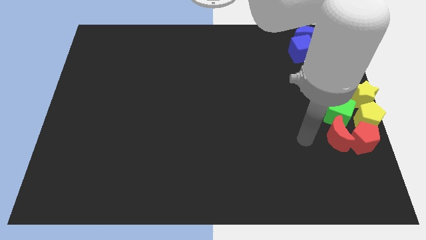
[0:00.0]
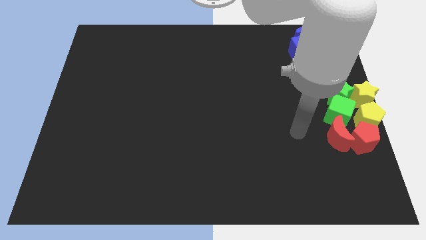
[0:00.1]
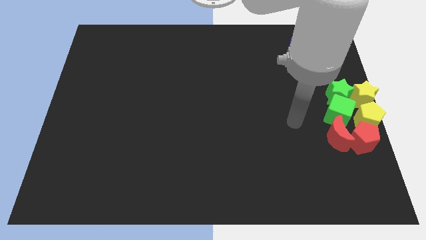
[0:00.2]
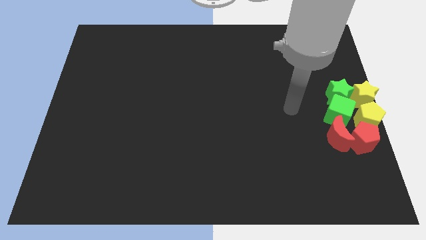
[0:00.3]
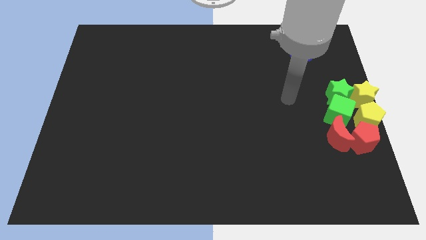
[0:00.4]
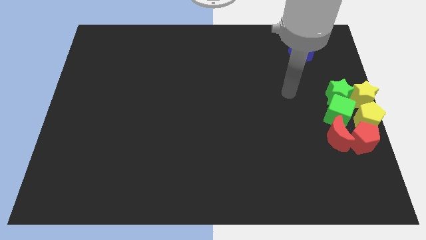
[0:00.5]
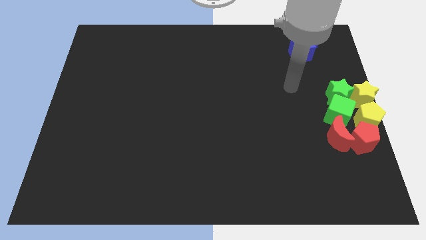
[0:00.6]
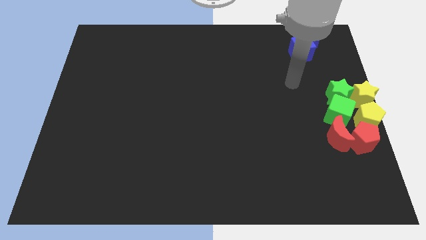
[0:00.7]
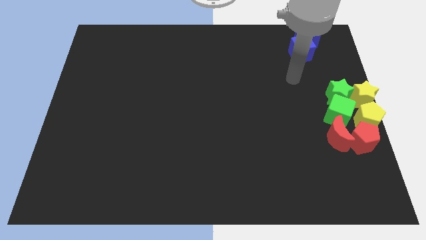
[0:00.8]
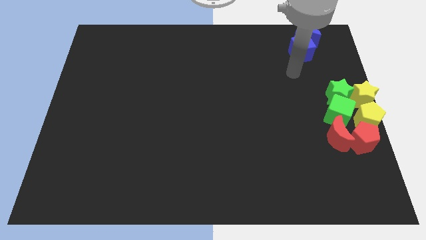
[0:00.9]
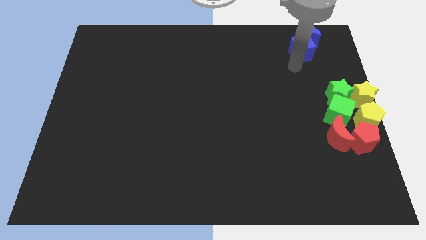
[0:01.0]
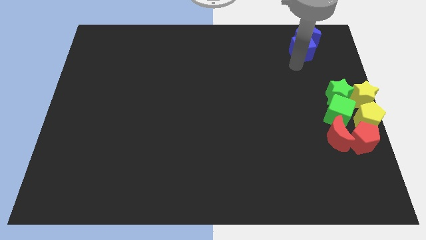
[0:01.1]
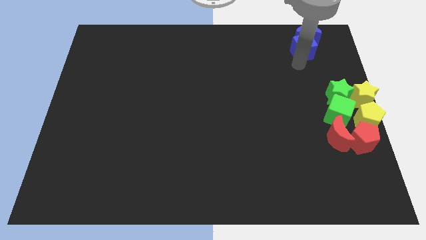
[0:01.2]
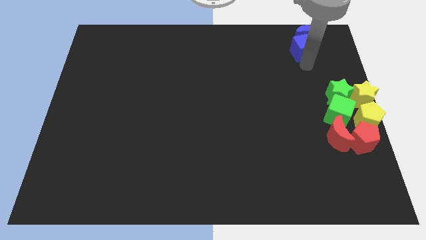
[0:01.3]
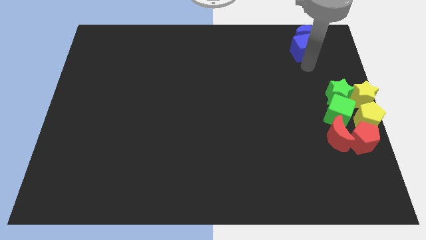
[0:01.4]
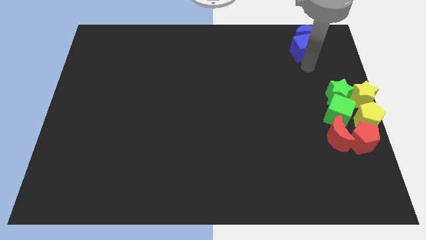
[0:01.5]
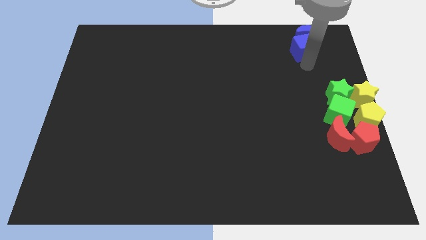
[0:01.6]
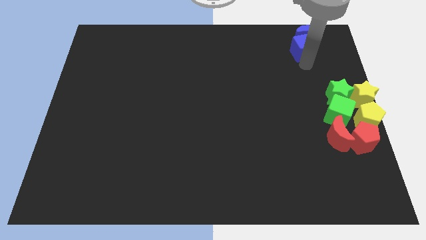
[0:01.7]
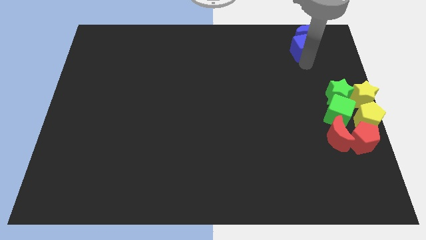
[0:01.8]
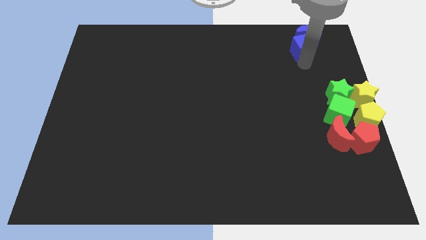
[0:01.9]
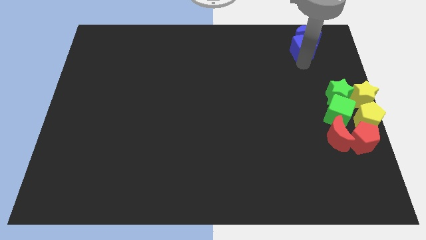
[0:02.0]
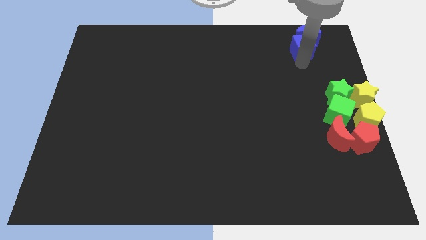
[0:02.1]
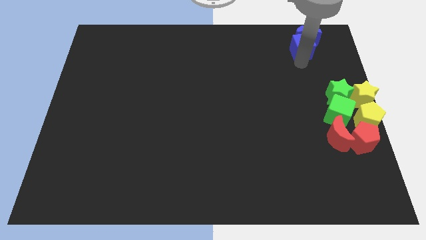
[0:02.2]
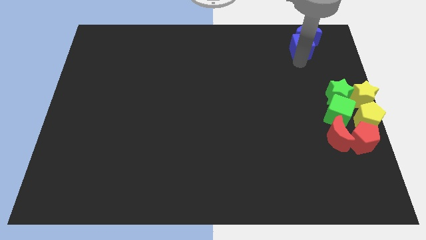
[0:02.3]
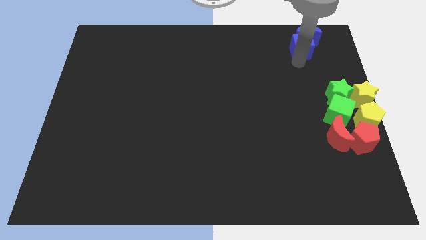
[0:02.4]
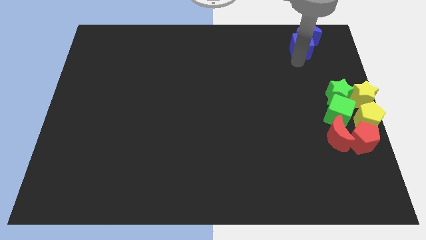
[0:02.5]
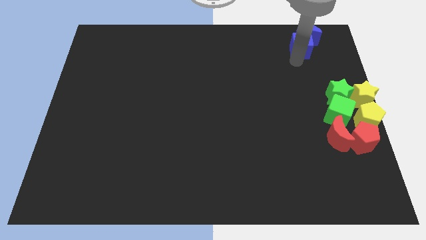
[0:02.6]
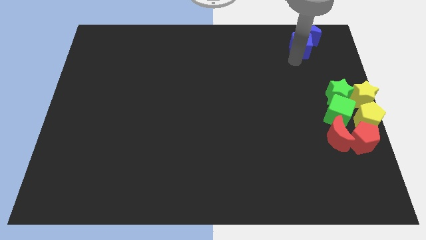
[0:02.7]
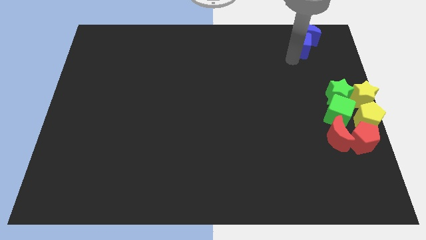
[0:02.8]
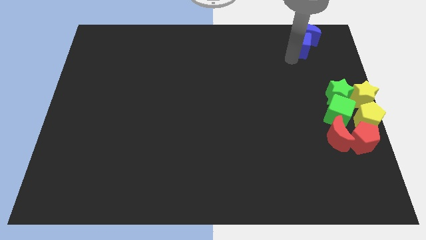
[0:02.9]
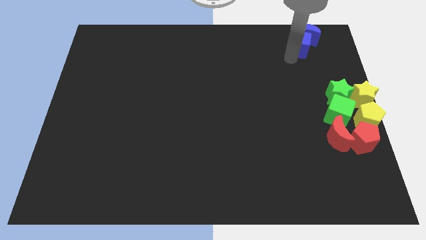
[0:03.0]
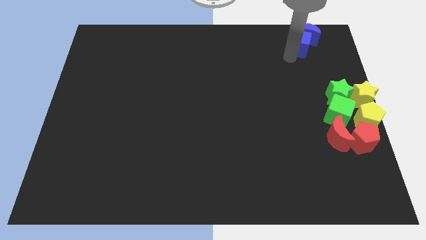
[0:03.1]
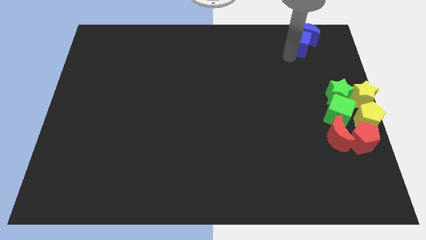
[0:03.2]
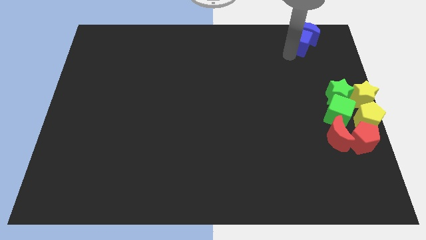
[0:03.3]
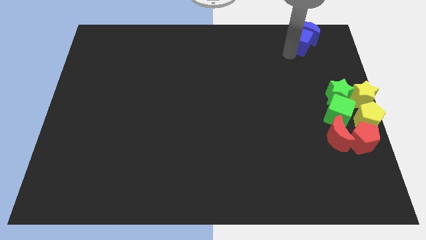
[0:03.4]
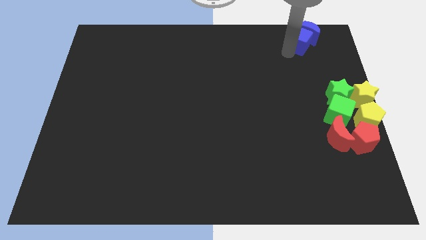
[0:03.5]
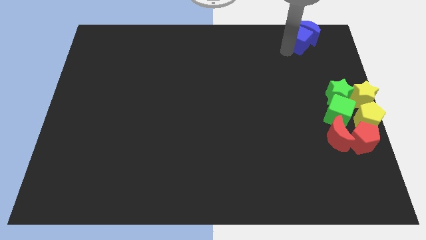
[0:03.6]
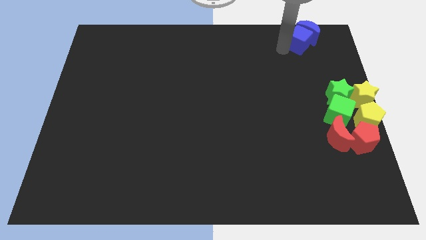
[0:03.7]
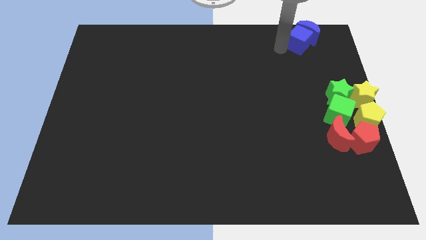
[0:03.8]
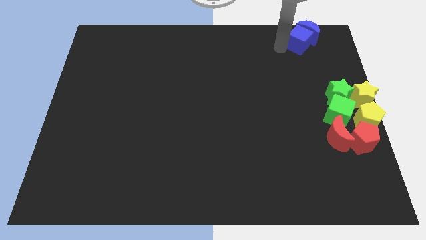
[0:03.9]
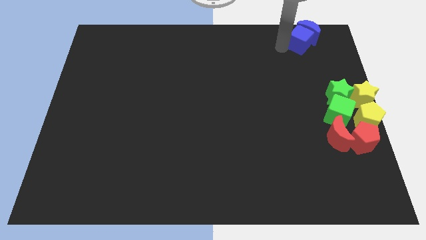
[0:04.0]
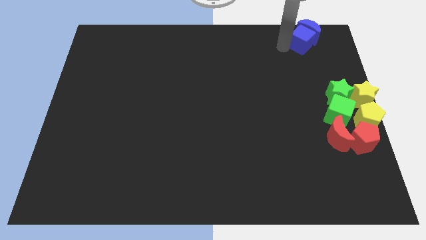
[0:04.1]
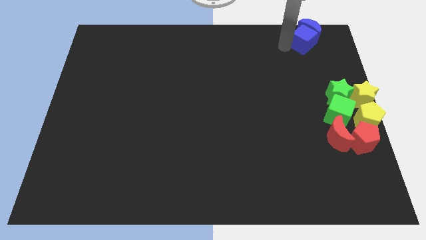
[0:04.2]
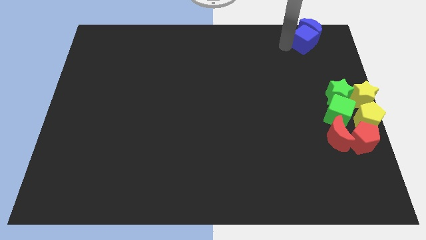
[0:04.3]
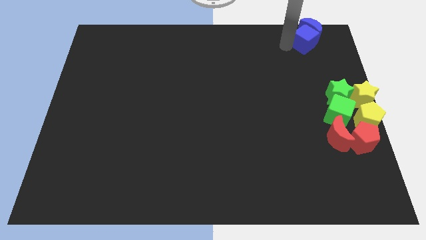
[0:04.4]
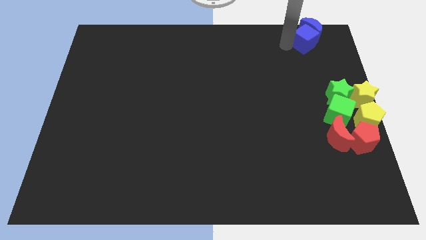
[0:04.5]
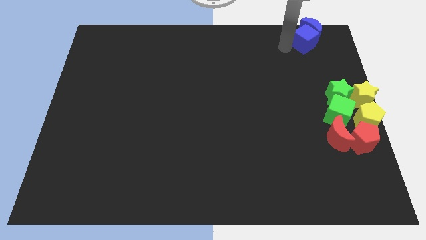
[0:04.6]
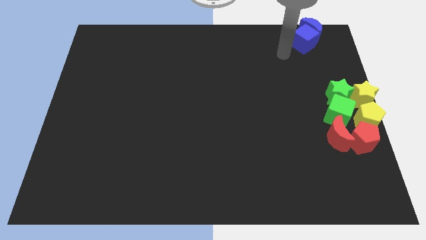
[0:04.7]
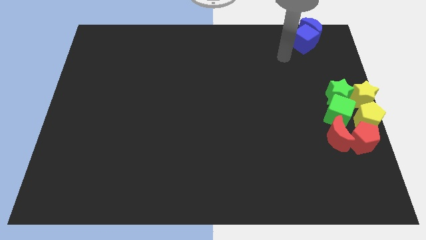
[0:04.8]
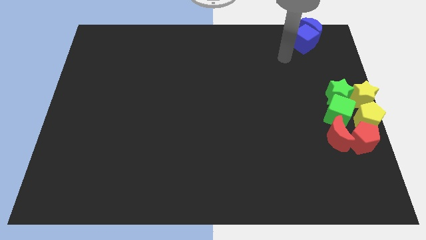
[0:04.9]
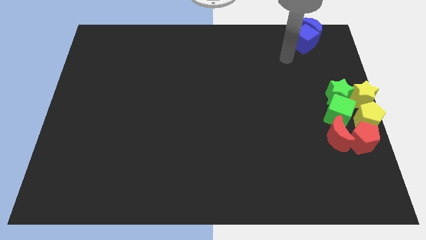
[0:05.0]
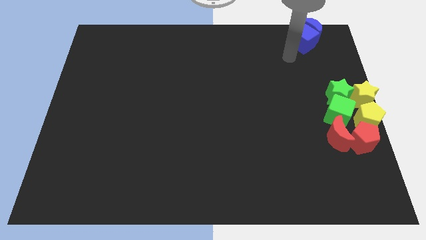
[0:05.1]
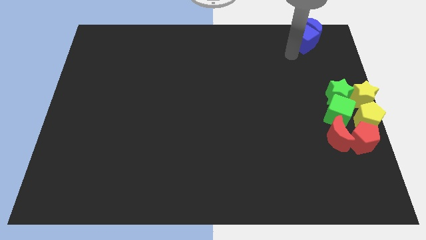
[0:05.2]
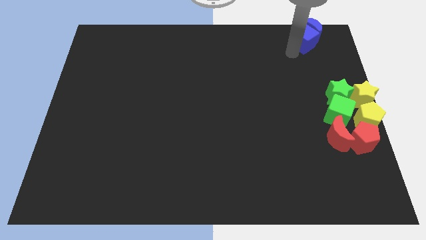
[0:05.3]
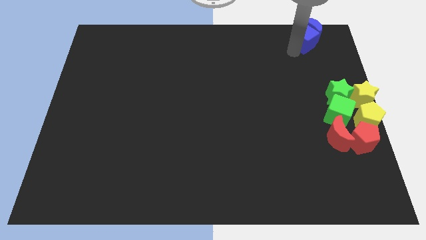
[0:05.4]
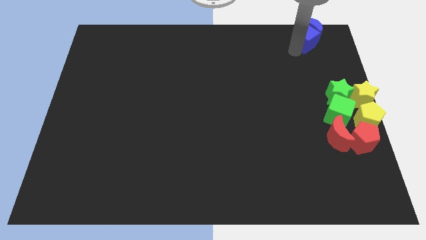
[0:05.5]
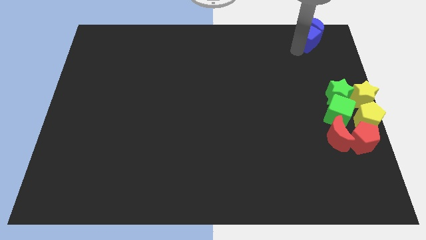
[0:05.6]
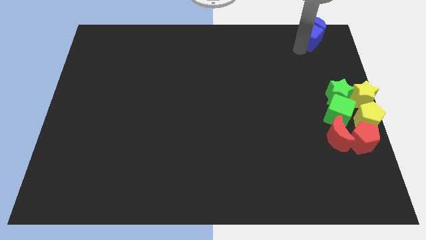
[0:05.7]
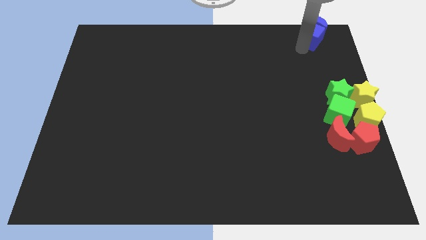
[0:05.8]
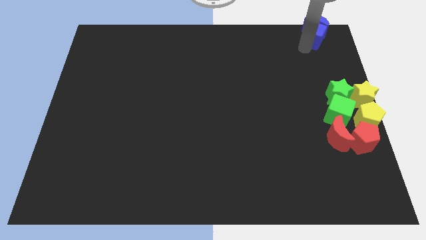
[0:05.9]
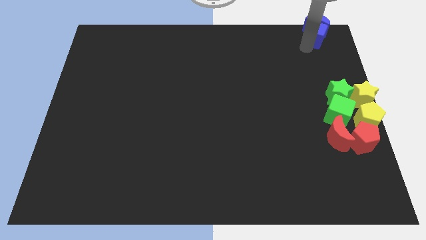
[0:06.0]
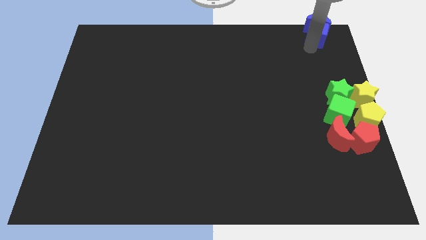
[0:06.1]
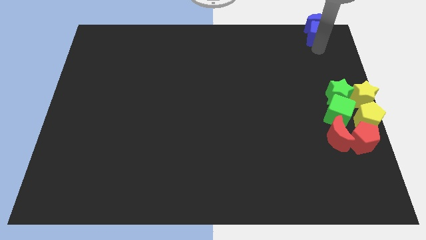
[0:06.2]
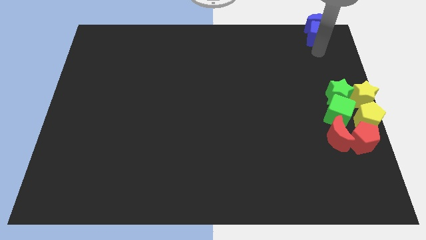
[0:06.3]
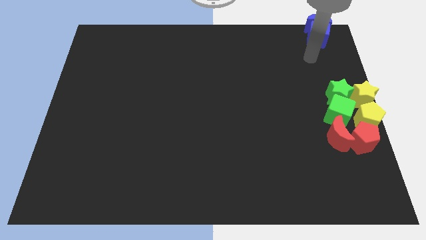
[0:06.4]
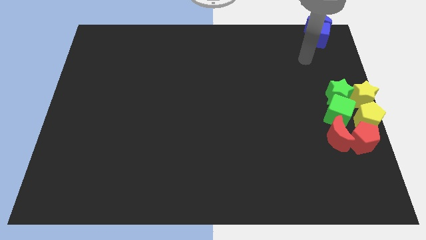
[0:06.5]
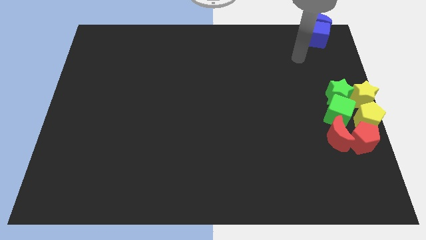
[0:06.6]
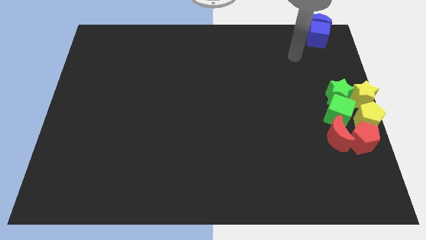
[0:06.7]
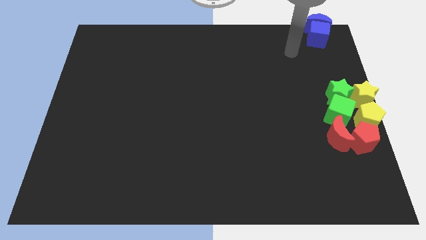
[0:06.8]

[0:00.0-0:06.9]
push the blue moon with a blue cube towards the top right

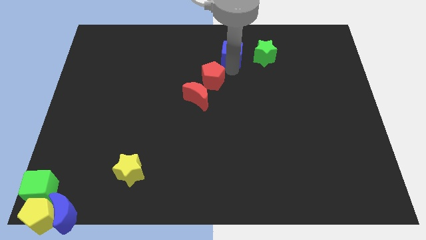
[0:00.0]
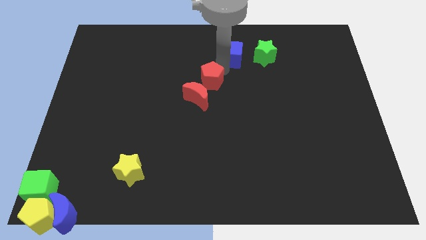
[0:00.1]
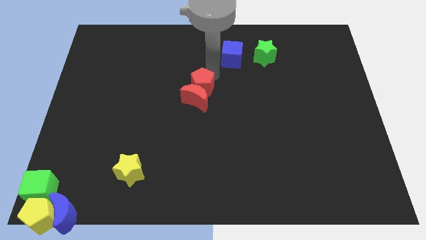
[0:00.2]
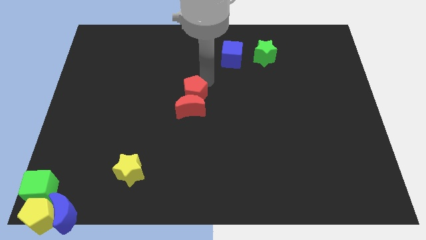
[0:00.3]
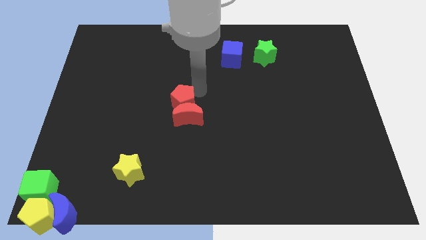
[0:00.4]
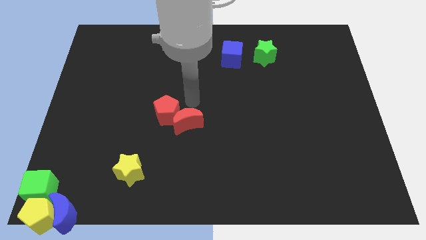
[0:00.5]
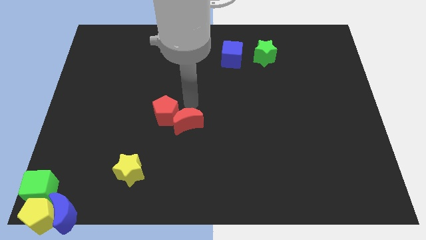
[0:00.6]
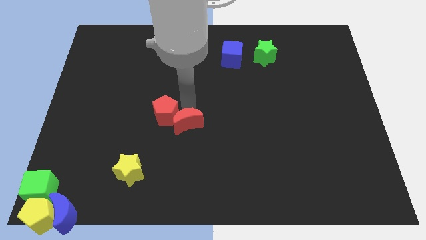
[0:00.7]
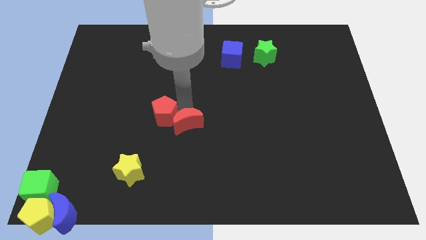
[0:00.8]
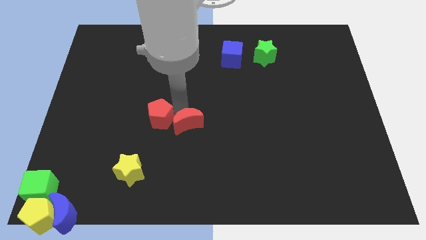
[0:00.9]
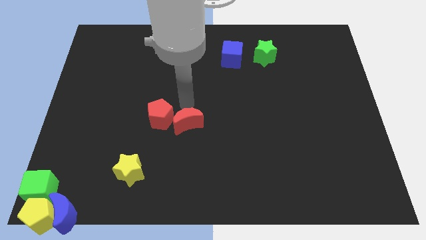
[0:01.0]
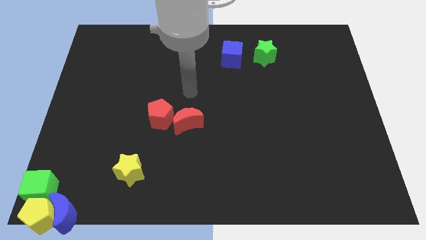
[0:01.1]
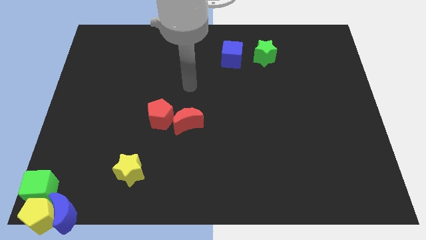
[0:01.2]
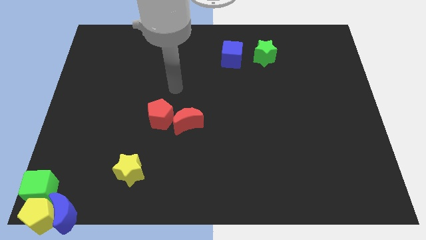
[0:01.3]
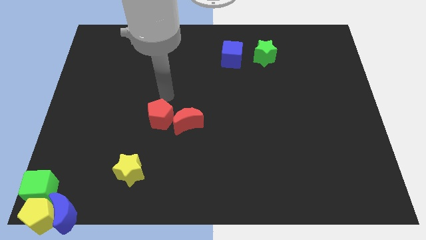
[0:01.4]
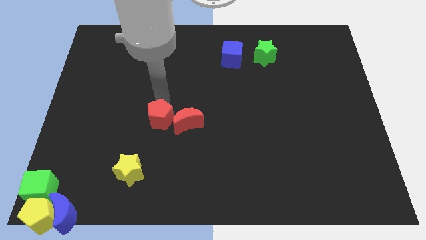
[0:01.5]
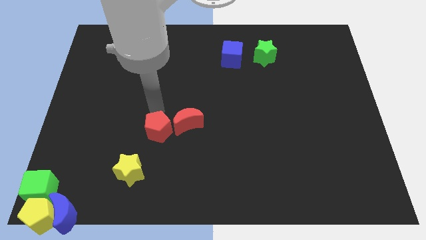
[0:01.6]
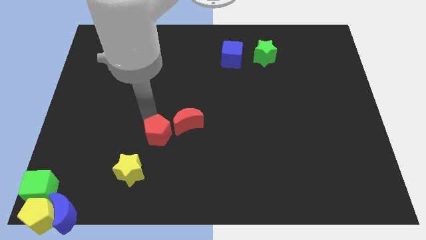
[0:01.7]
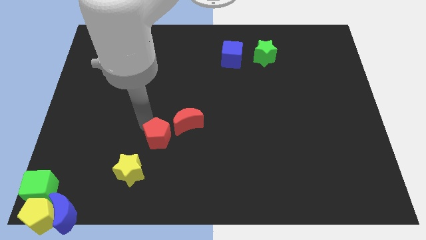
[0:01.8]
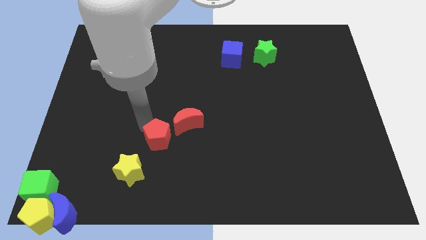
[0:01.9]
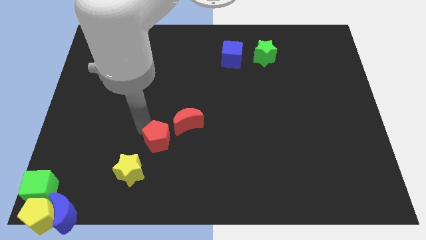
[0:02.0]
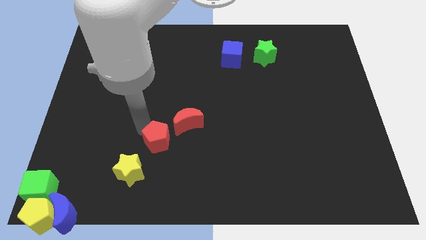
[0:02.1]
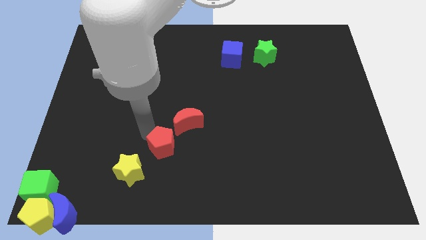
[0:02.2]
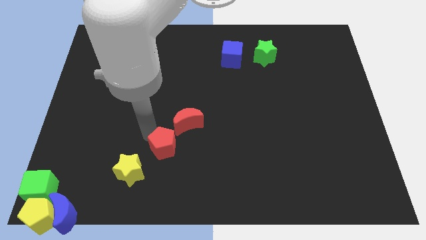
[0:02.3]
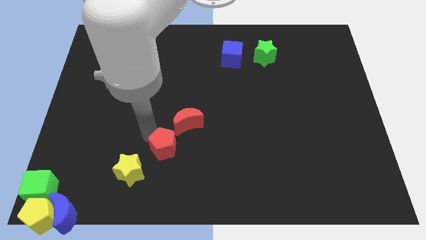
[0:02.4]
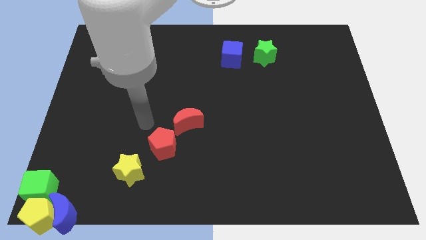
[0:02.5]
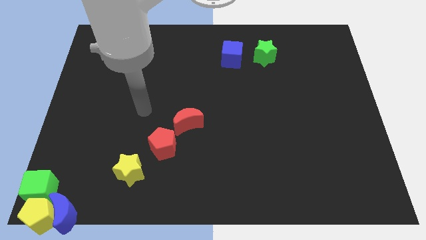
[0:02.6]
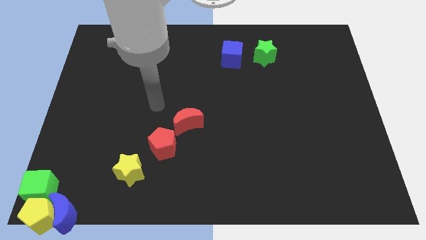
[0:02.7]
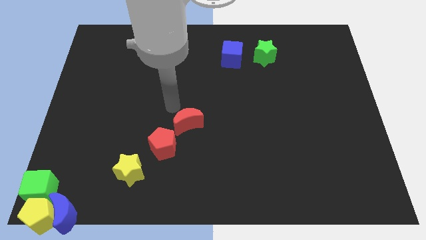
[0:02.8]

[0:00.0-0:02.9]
place the red pentagon at the bottom left of the red crescent
